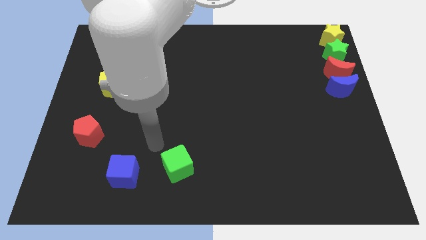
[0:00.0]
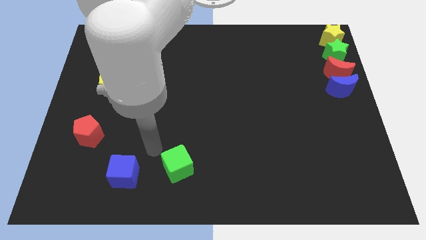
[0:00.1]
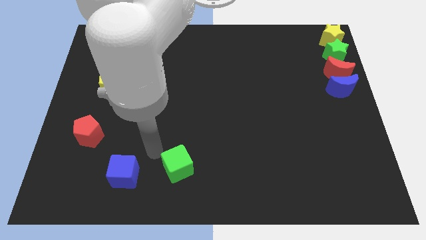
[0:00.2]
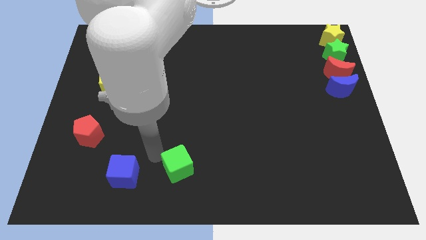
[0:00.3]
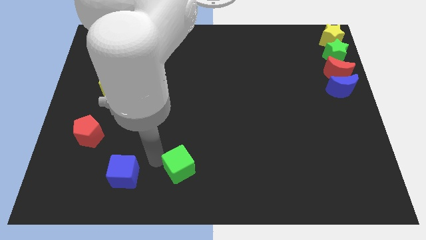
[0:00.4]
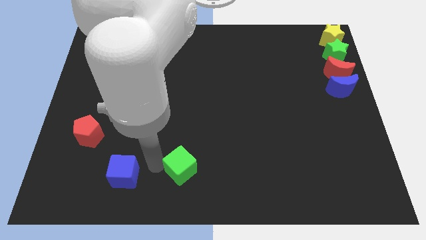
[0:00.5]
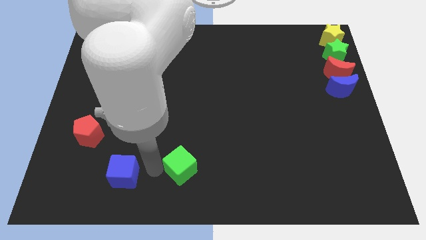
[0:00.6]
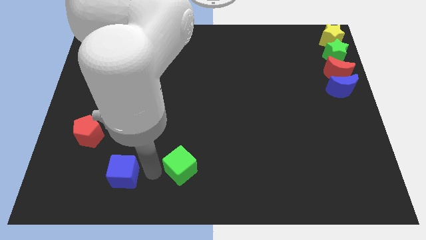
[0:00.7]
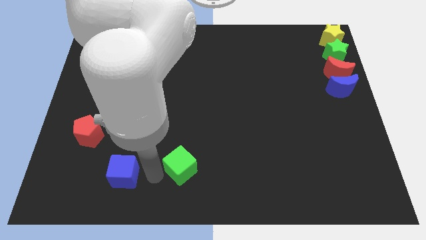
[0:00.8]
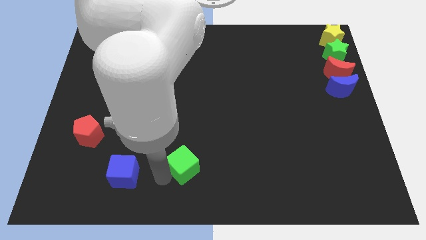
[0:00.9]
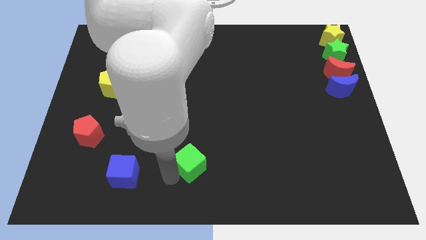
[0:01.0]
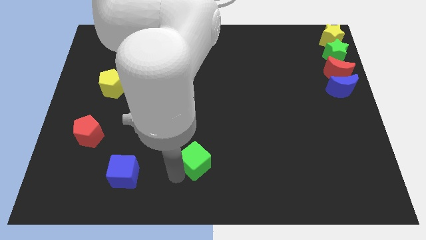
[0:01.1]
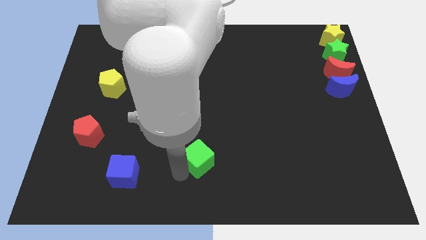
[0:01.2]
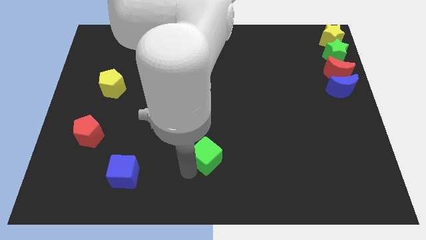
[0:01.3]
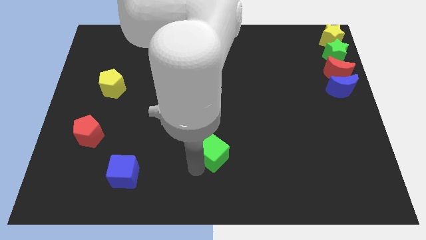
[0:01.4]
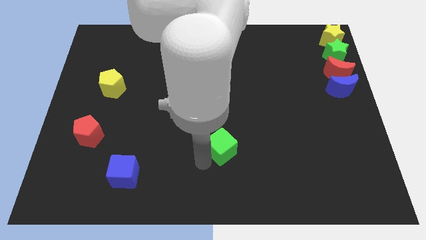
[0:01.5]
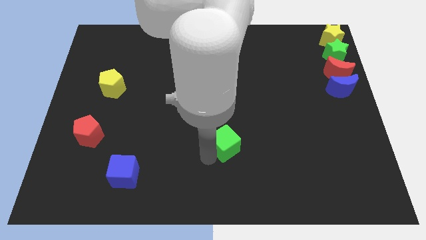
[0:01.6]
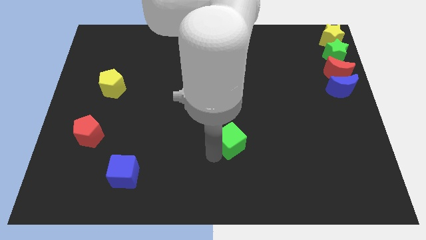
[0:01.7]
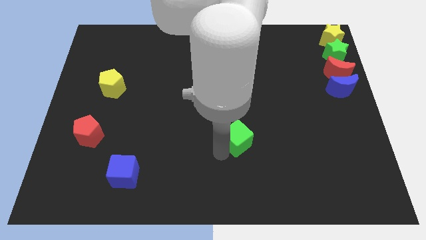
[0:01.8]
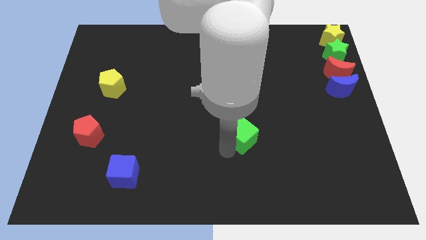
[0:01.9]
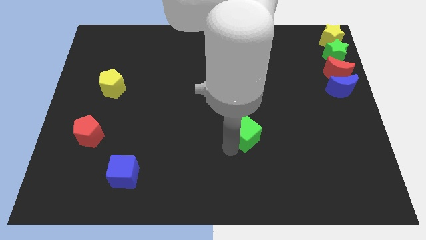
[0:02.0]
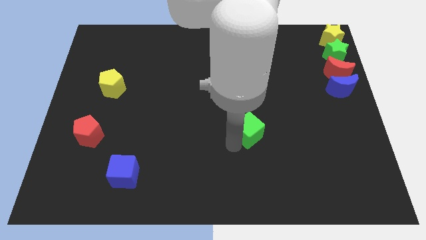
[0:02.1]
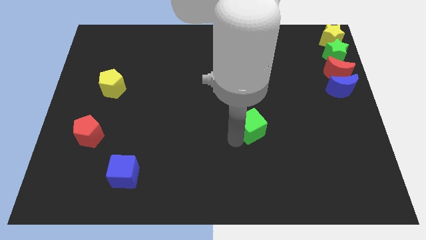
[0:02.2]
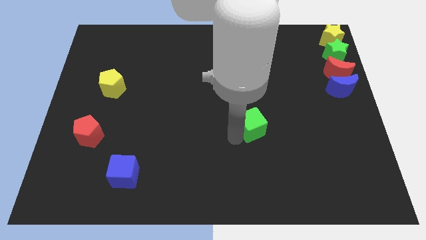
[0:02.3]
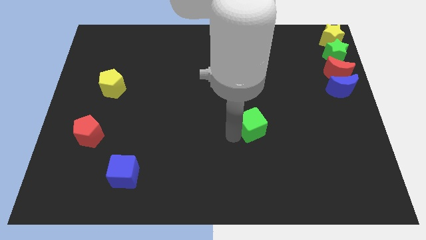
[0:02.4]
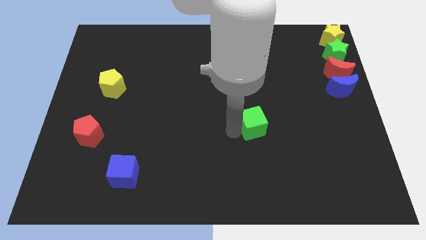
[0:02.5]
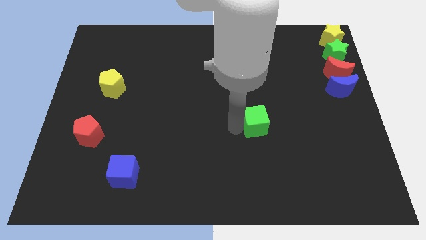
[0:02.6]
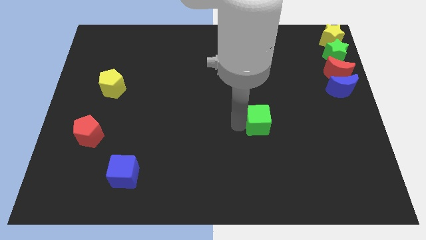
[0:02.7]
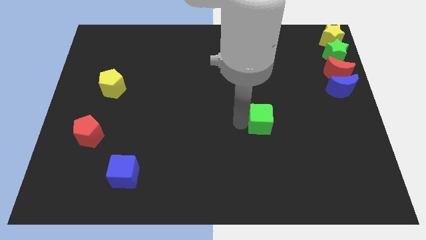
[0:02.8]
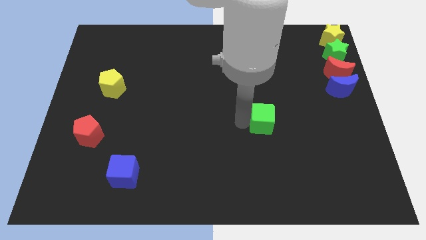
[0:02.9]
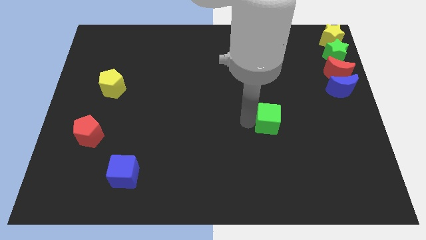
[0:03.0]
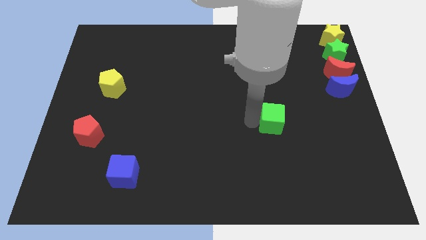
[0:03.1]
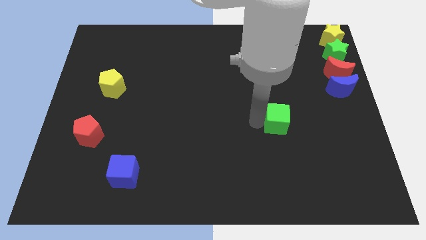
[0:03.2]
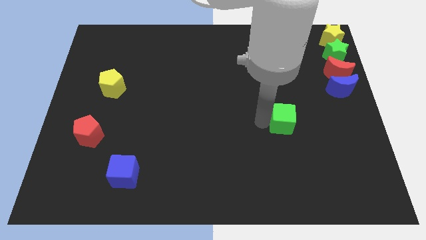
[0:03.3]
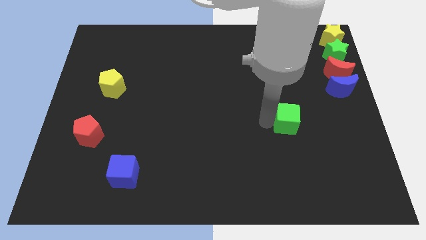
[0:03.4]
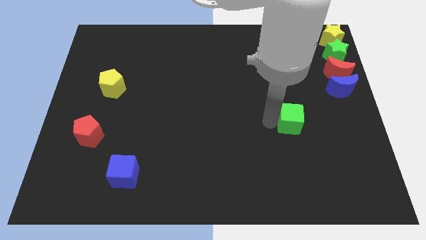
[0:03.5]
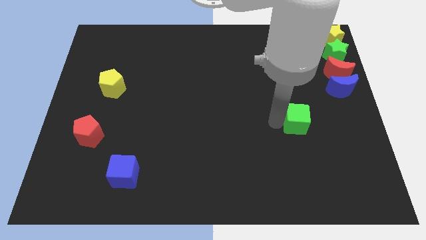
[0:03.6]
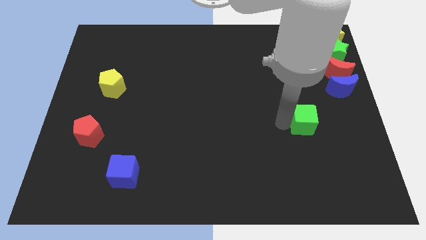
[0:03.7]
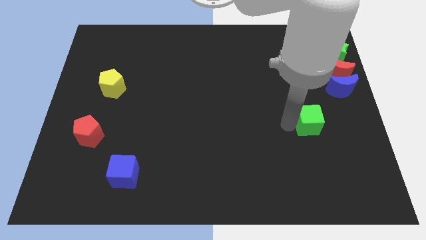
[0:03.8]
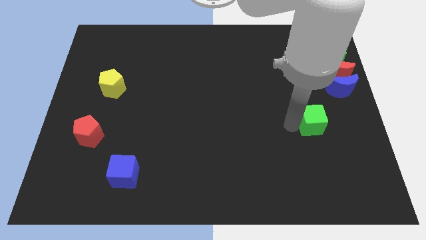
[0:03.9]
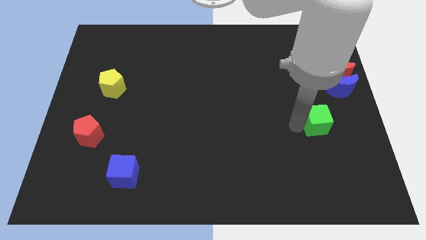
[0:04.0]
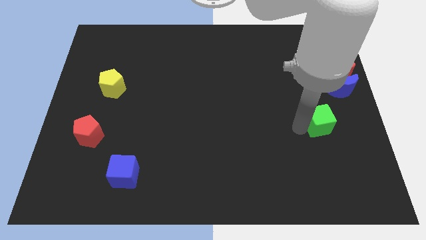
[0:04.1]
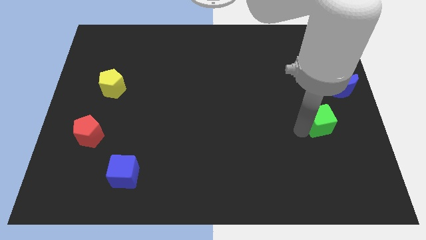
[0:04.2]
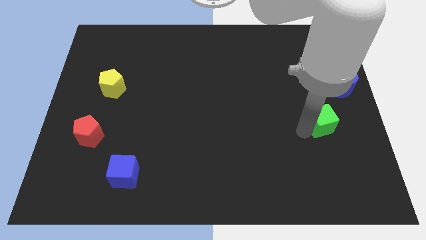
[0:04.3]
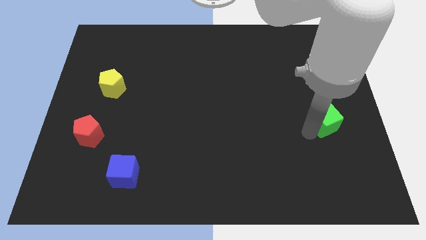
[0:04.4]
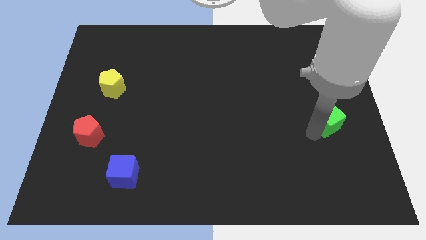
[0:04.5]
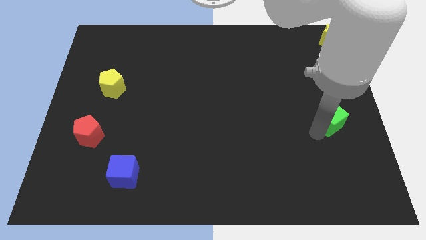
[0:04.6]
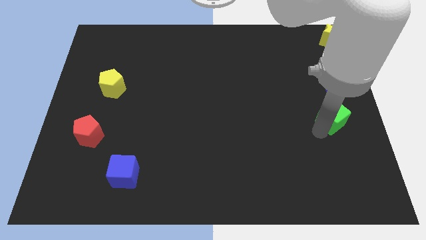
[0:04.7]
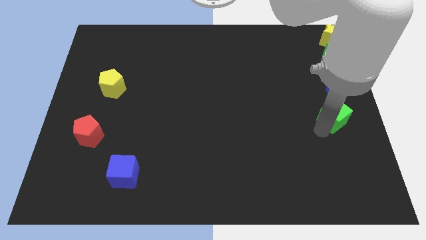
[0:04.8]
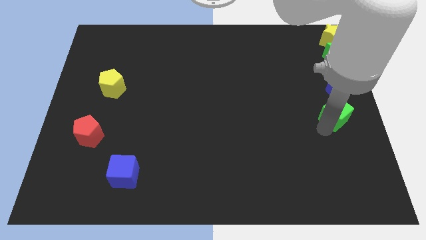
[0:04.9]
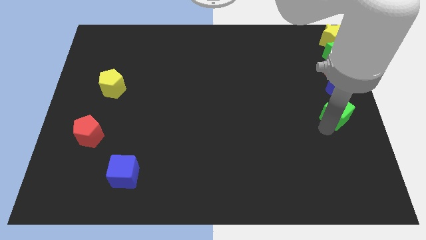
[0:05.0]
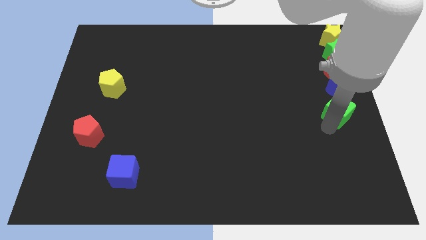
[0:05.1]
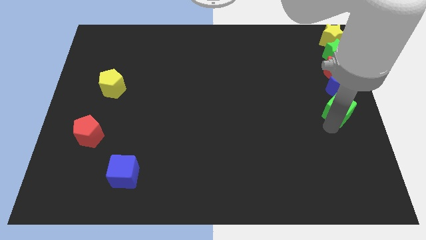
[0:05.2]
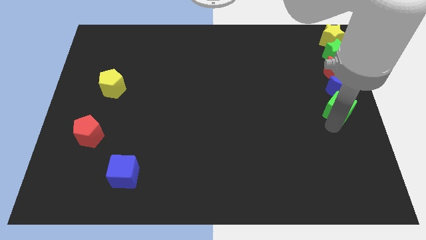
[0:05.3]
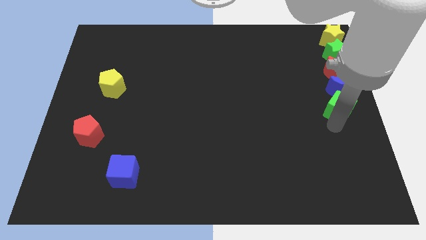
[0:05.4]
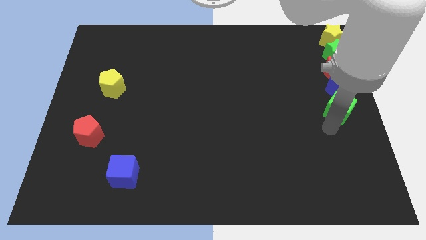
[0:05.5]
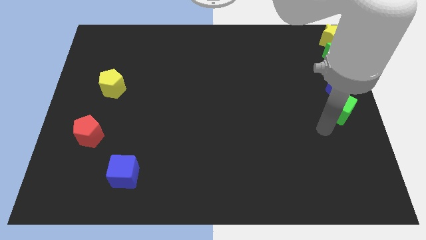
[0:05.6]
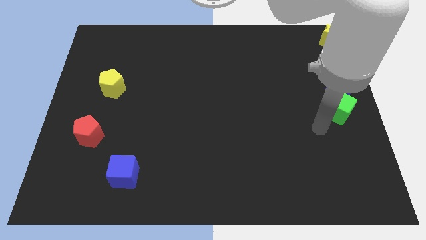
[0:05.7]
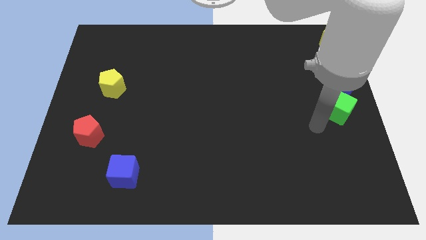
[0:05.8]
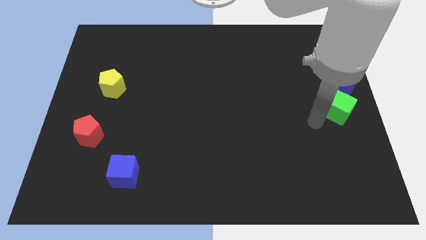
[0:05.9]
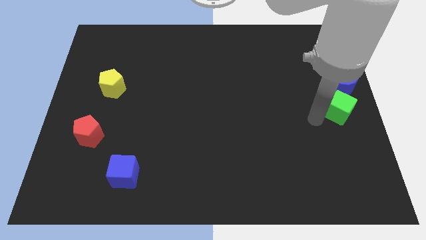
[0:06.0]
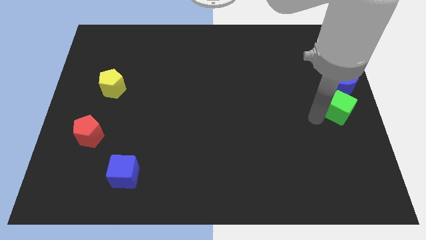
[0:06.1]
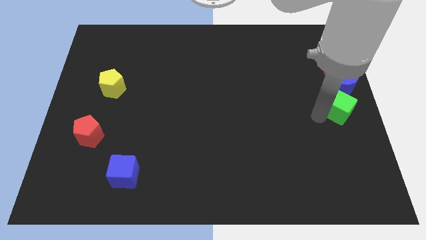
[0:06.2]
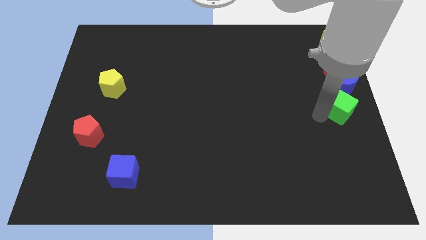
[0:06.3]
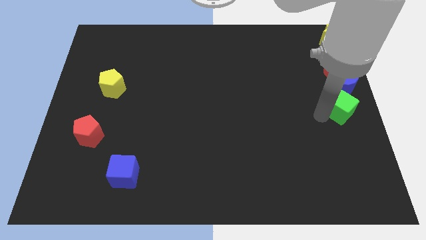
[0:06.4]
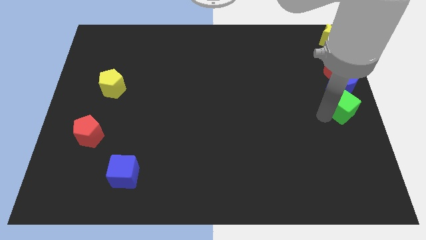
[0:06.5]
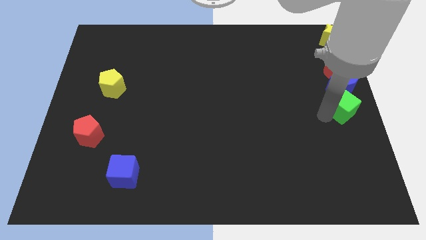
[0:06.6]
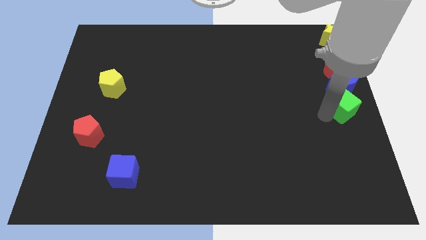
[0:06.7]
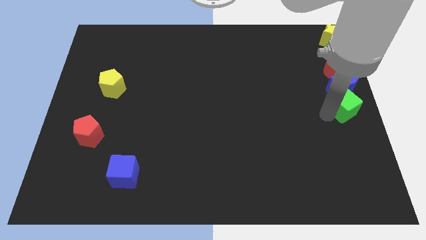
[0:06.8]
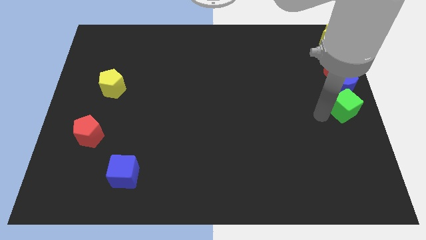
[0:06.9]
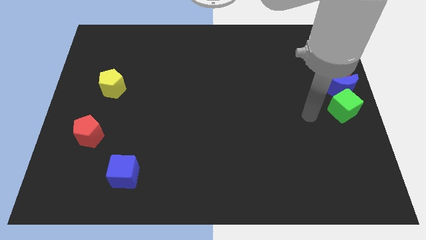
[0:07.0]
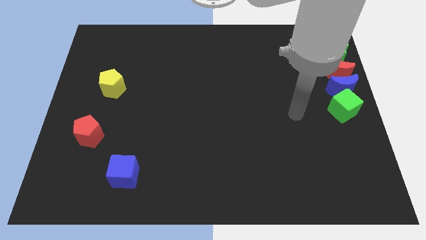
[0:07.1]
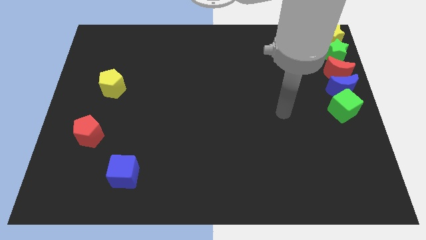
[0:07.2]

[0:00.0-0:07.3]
push the green cube towards the right center

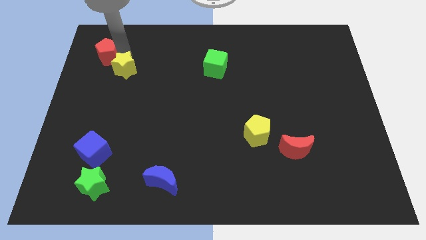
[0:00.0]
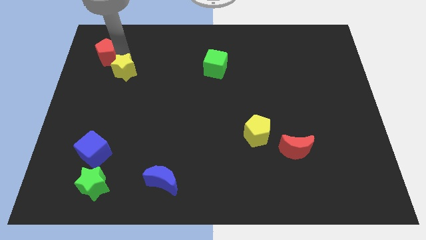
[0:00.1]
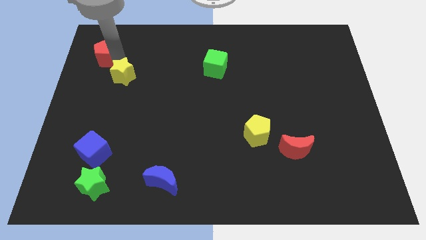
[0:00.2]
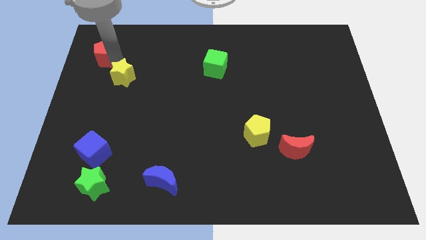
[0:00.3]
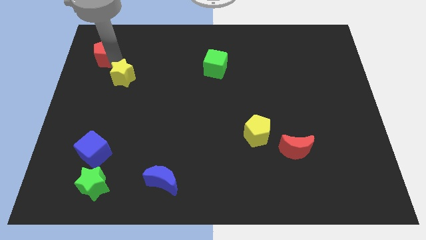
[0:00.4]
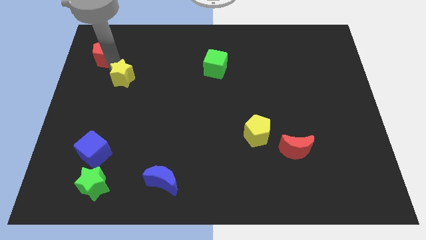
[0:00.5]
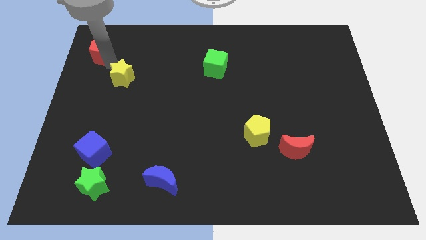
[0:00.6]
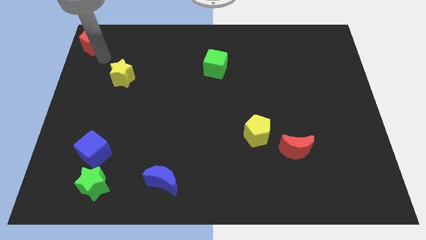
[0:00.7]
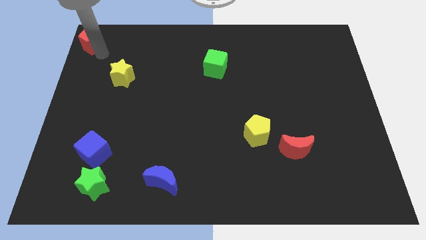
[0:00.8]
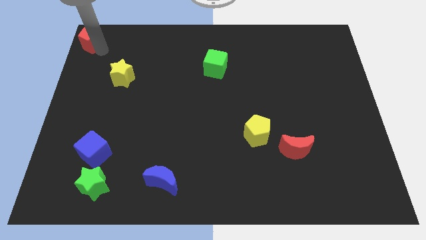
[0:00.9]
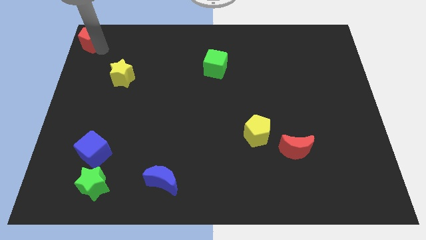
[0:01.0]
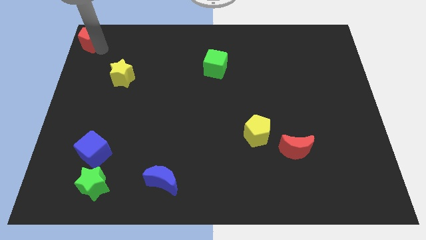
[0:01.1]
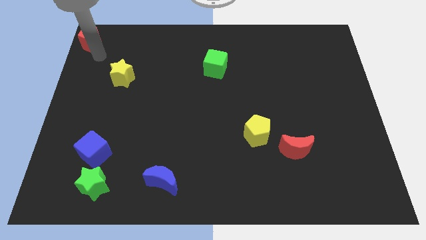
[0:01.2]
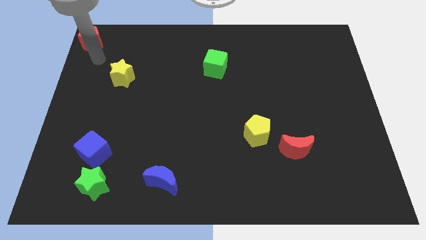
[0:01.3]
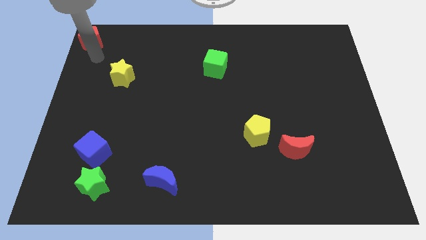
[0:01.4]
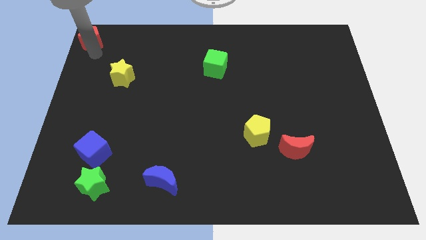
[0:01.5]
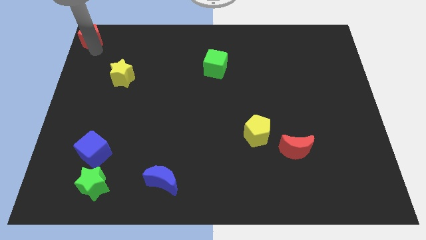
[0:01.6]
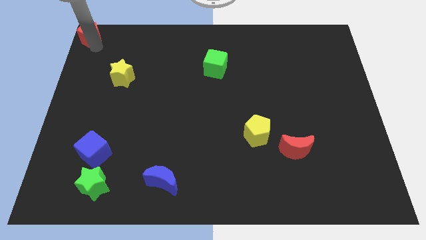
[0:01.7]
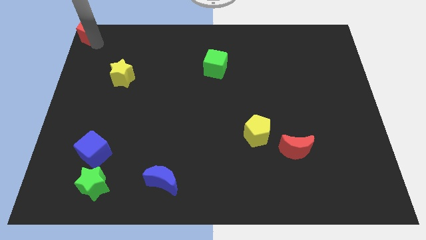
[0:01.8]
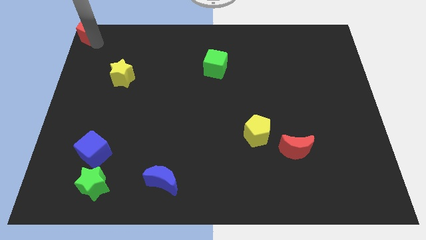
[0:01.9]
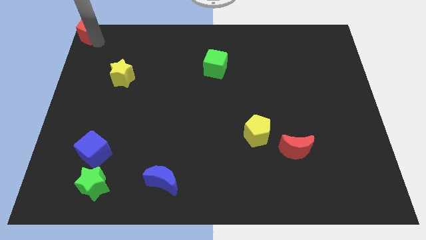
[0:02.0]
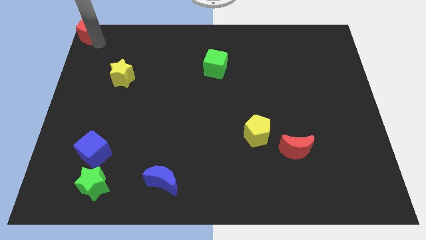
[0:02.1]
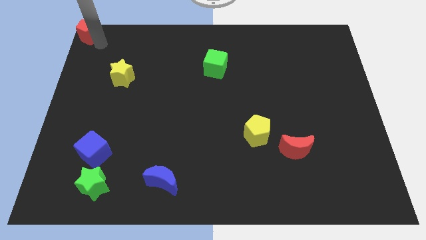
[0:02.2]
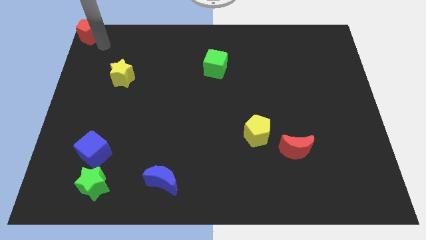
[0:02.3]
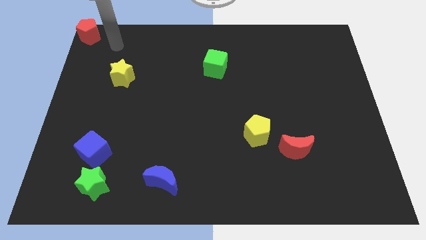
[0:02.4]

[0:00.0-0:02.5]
place the red pentagon at the top left corner of the board
